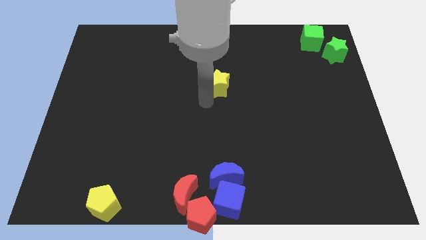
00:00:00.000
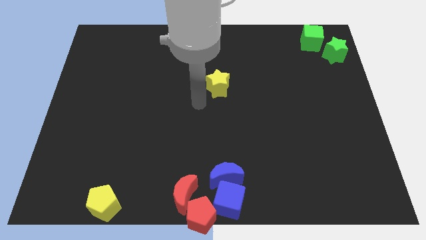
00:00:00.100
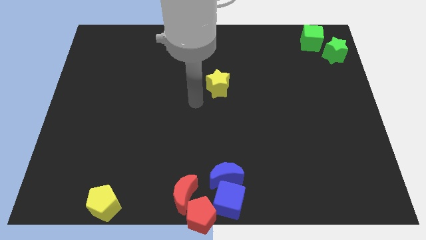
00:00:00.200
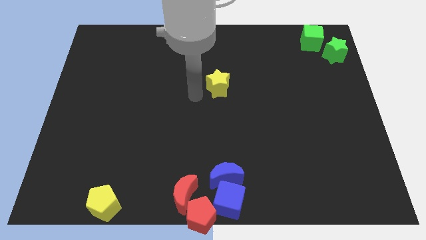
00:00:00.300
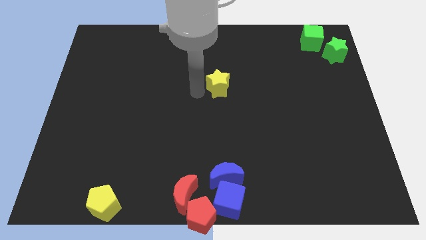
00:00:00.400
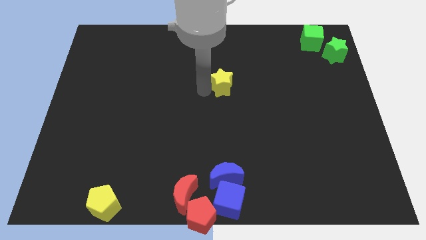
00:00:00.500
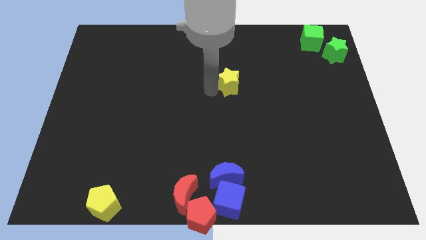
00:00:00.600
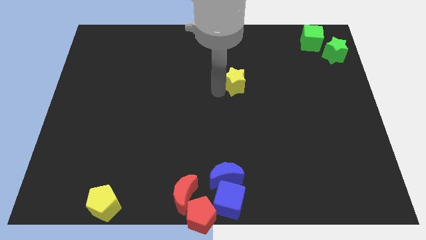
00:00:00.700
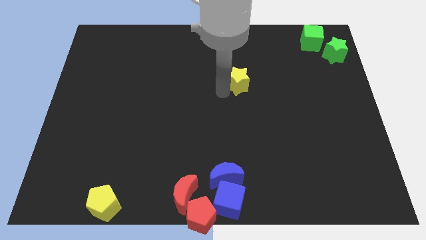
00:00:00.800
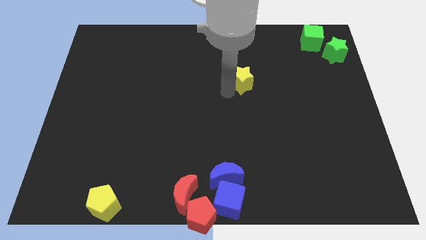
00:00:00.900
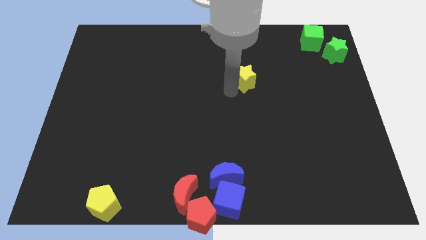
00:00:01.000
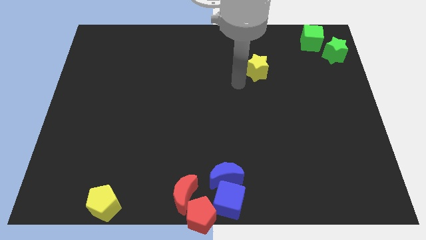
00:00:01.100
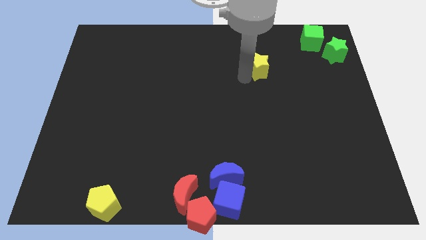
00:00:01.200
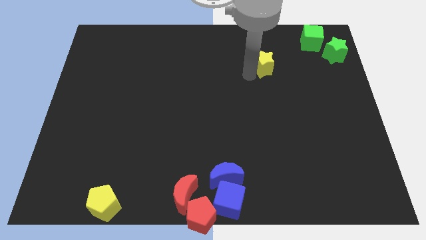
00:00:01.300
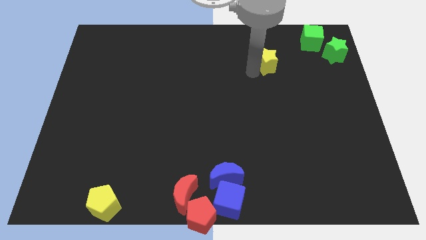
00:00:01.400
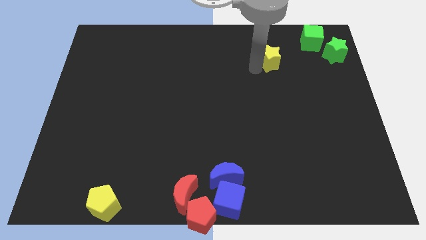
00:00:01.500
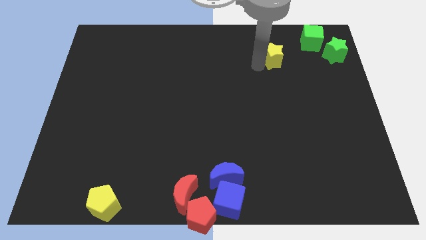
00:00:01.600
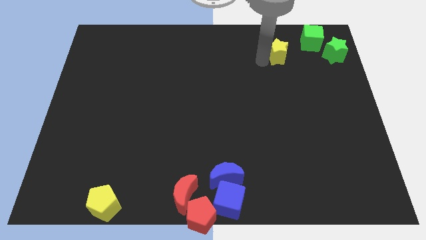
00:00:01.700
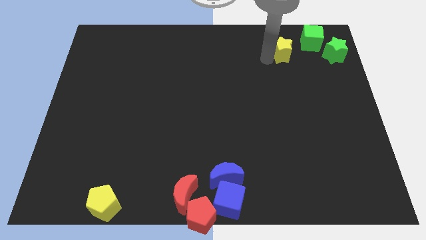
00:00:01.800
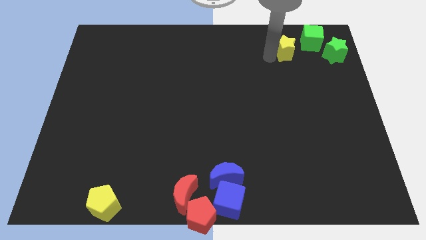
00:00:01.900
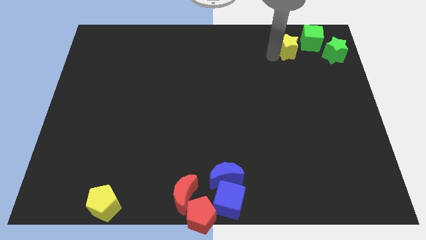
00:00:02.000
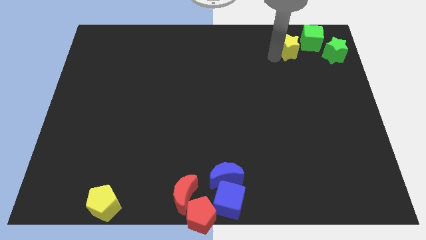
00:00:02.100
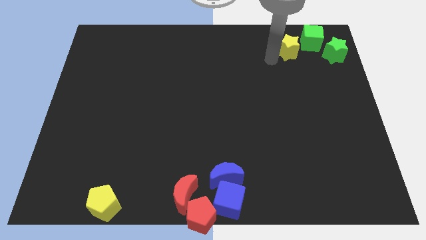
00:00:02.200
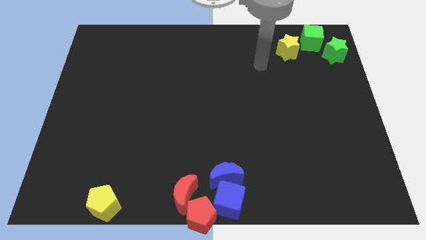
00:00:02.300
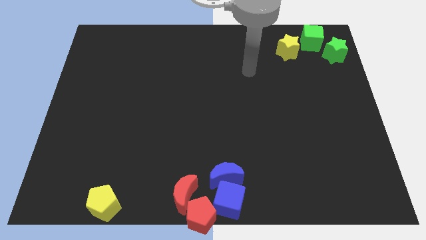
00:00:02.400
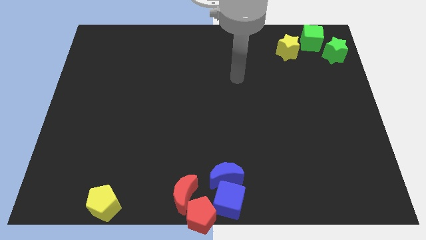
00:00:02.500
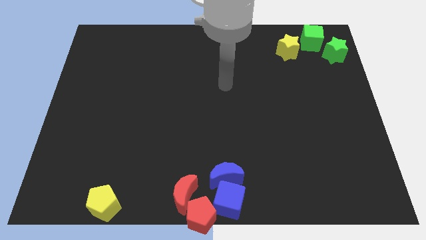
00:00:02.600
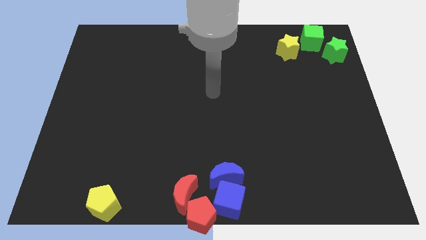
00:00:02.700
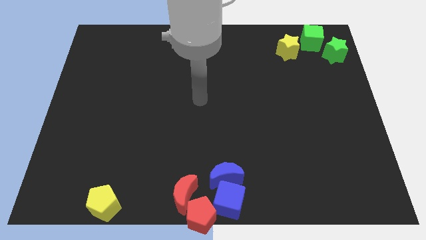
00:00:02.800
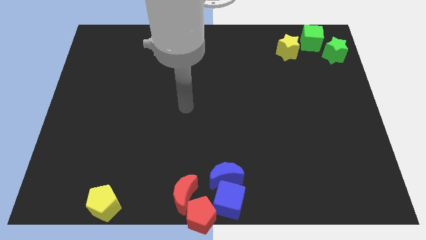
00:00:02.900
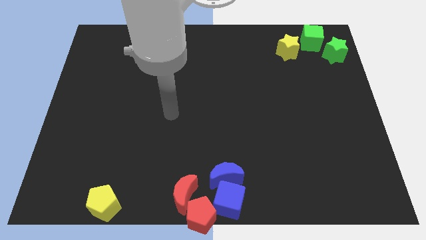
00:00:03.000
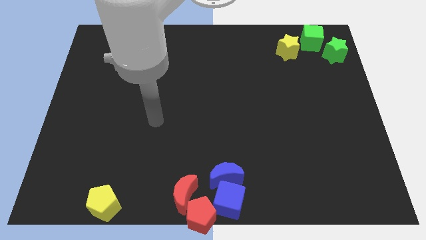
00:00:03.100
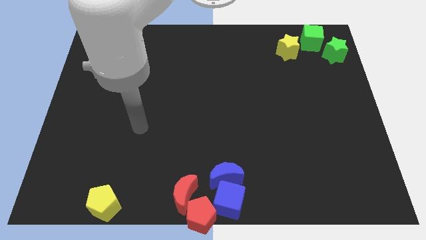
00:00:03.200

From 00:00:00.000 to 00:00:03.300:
push the yellow star at the down left side of the green square

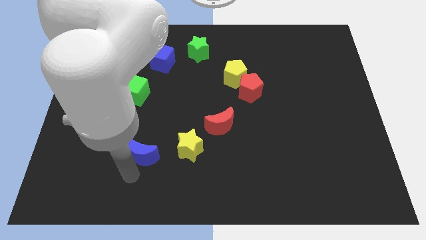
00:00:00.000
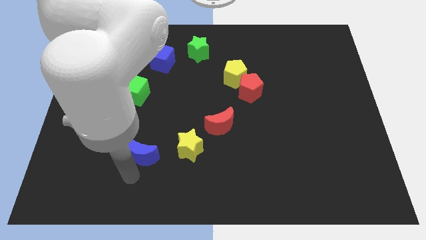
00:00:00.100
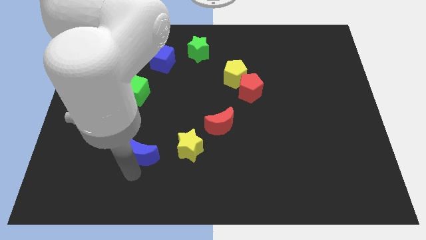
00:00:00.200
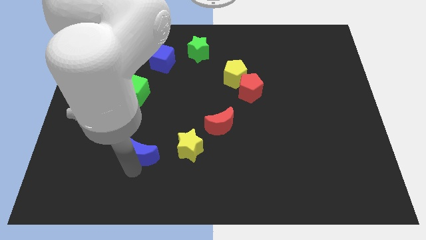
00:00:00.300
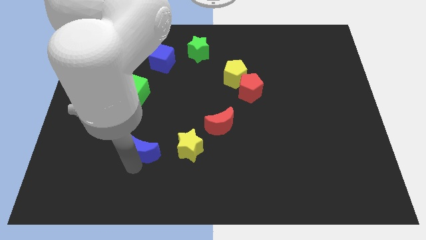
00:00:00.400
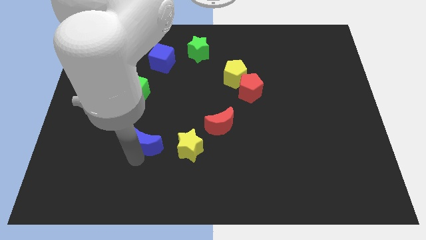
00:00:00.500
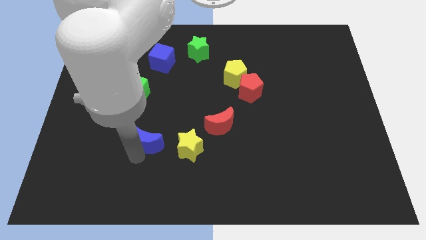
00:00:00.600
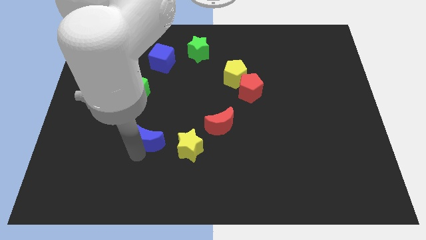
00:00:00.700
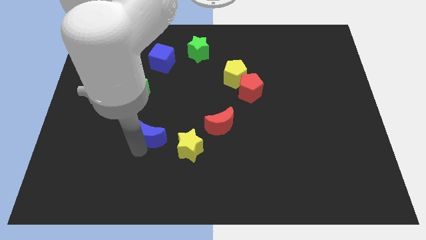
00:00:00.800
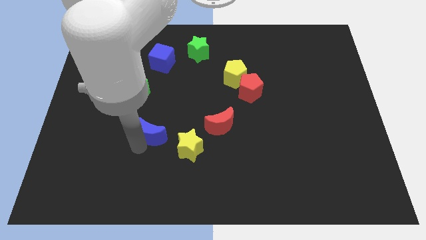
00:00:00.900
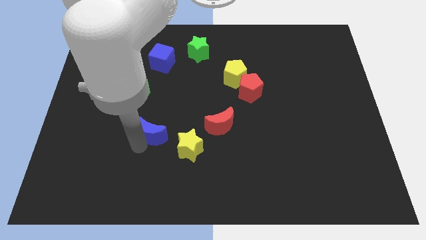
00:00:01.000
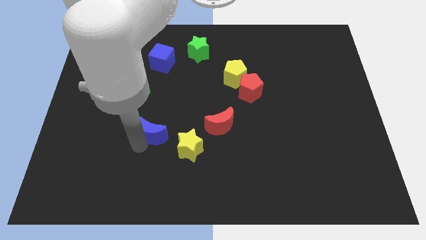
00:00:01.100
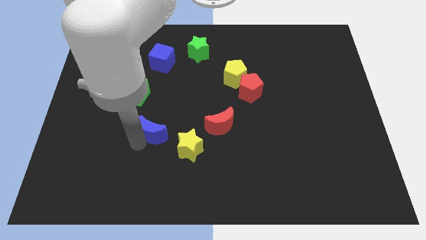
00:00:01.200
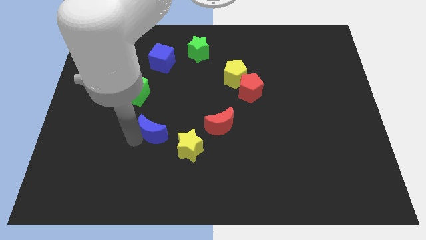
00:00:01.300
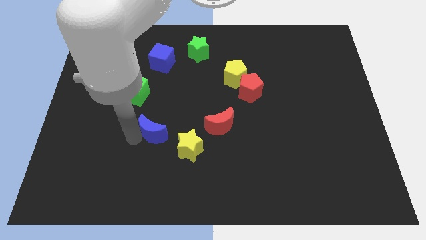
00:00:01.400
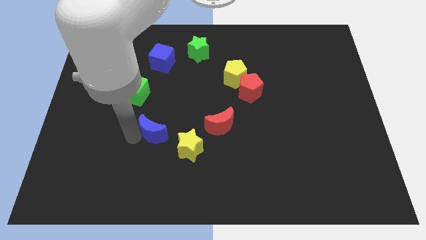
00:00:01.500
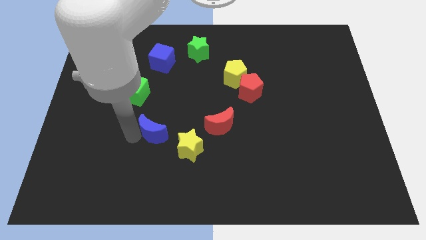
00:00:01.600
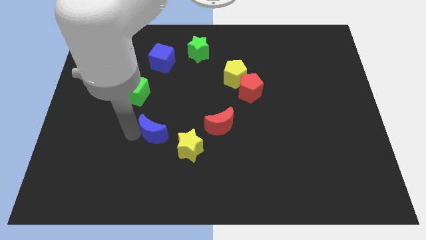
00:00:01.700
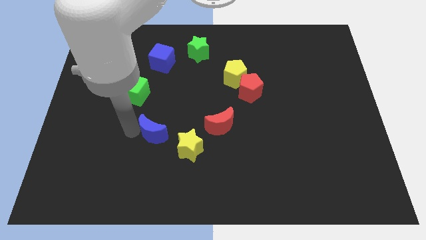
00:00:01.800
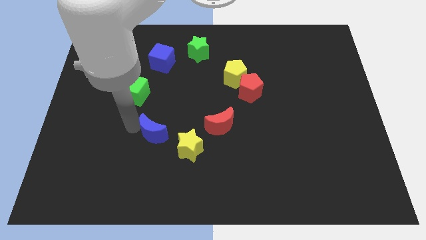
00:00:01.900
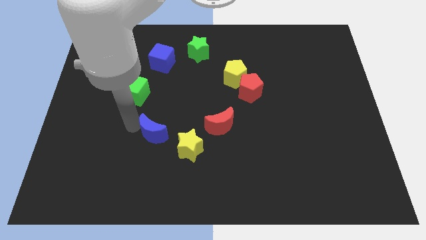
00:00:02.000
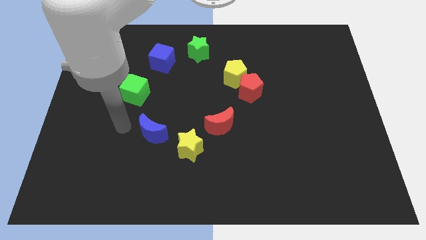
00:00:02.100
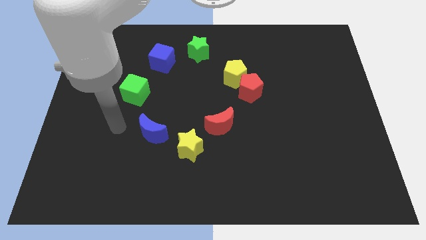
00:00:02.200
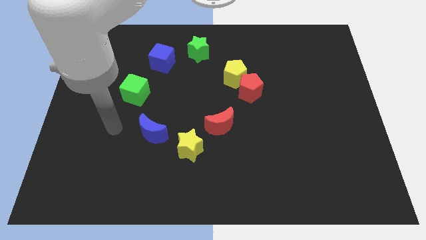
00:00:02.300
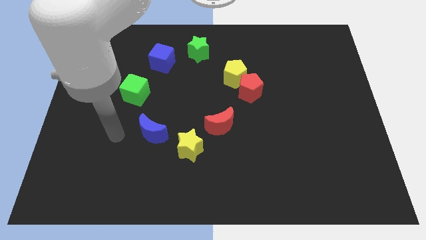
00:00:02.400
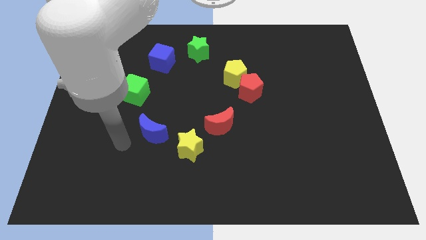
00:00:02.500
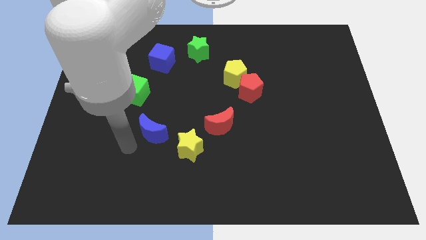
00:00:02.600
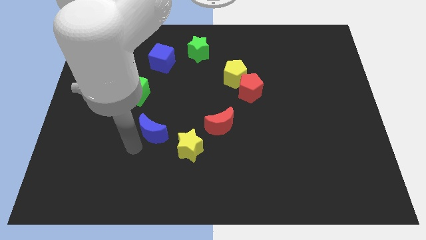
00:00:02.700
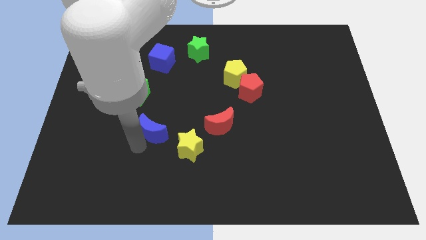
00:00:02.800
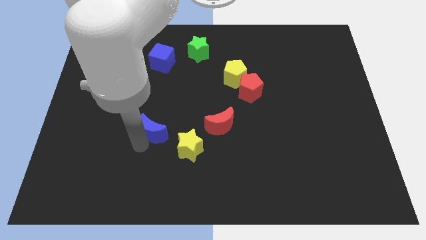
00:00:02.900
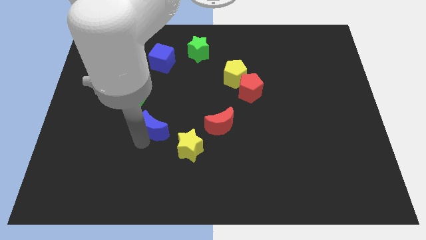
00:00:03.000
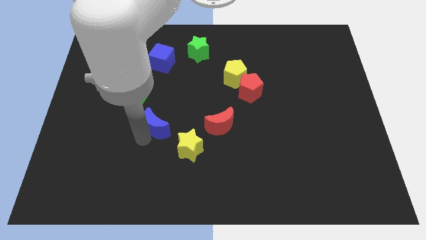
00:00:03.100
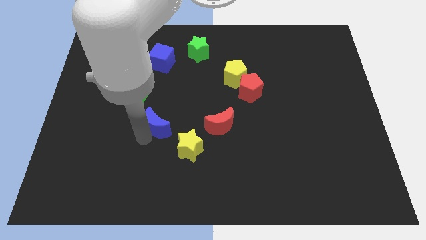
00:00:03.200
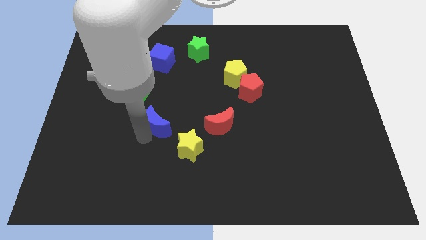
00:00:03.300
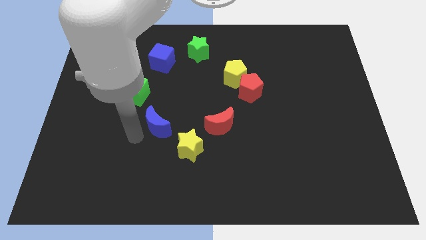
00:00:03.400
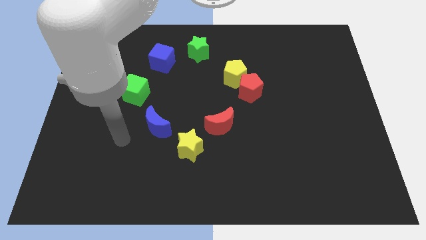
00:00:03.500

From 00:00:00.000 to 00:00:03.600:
place the blue moon diagonal to the green cube

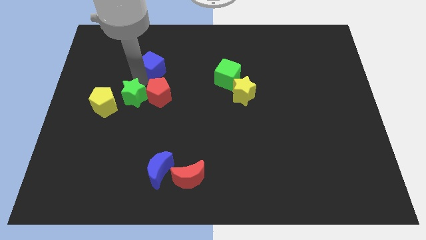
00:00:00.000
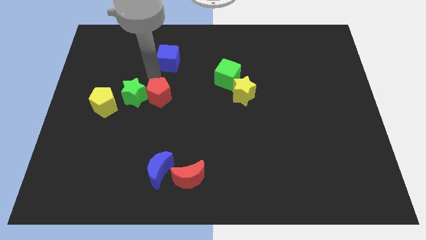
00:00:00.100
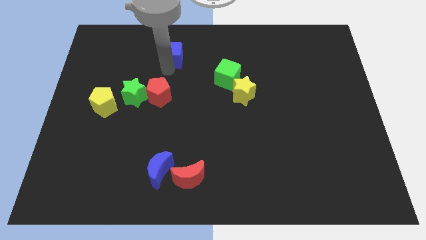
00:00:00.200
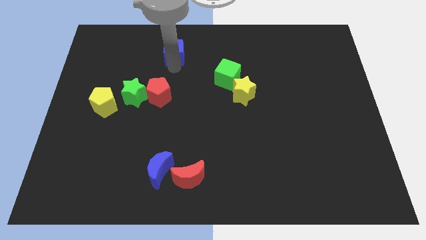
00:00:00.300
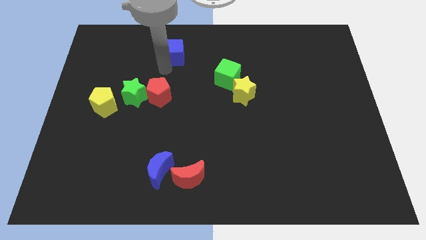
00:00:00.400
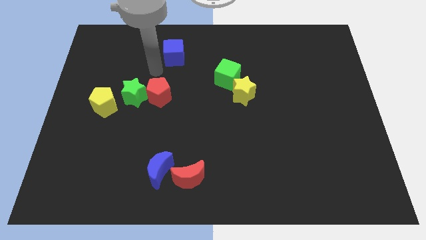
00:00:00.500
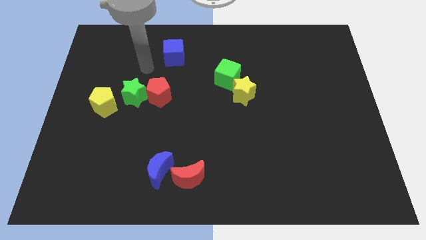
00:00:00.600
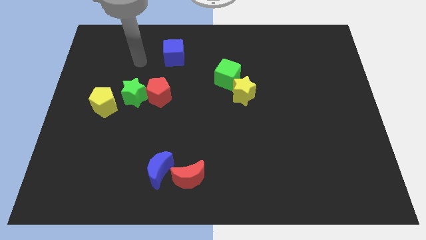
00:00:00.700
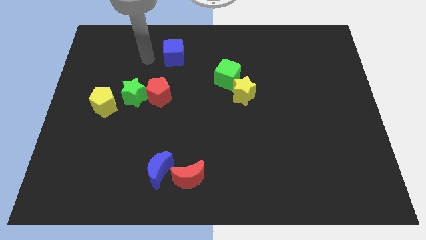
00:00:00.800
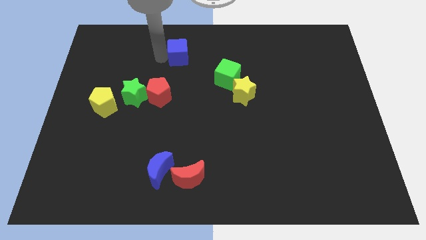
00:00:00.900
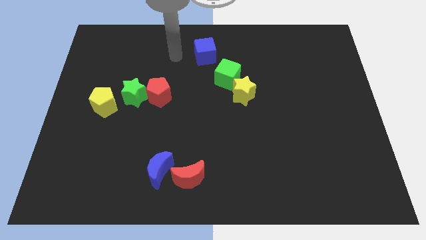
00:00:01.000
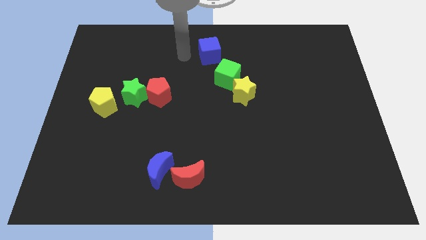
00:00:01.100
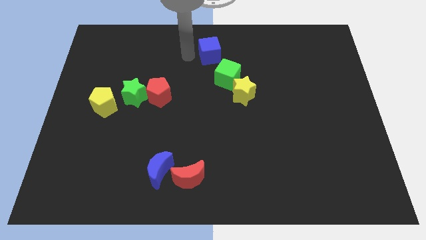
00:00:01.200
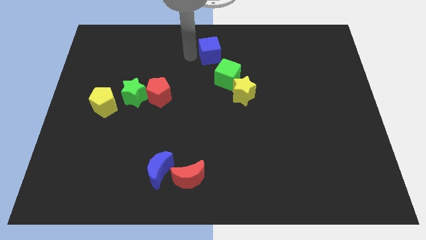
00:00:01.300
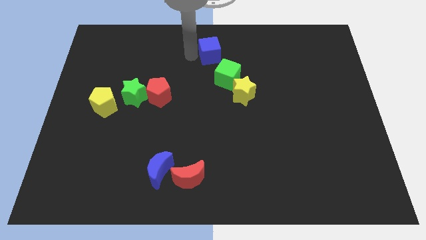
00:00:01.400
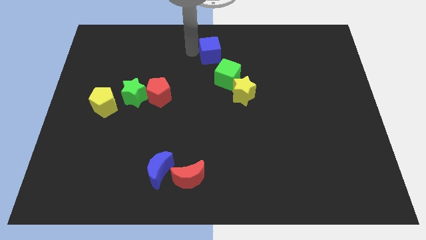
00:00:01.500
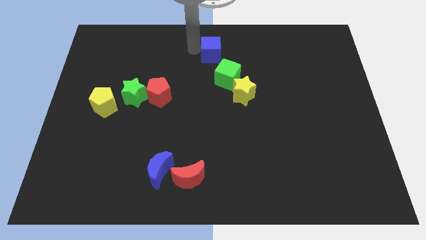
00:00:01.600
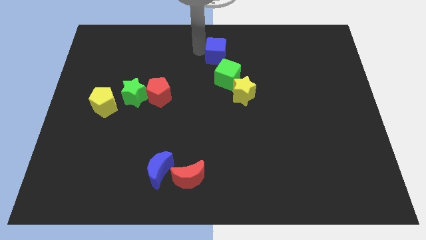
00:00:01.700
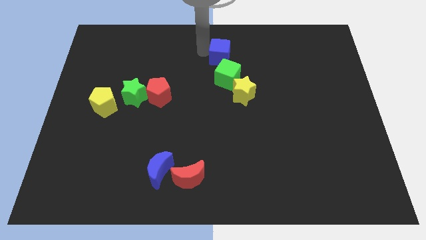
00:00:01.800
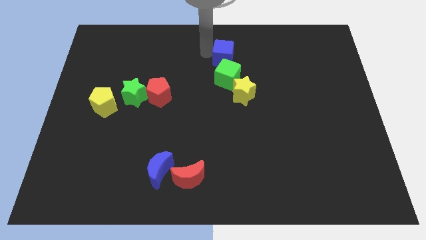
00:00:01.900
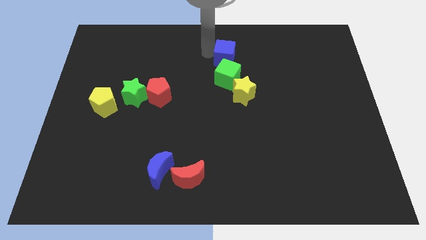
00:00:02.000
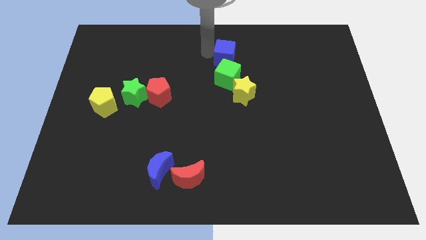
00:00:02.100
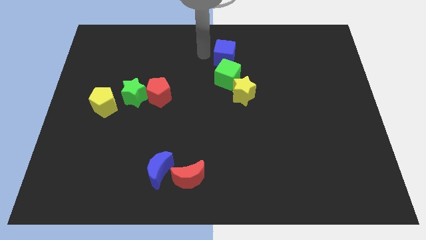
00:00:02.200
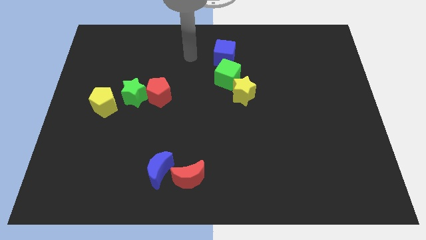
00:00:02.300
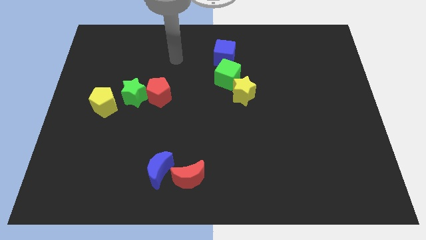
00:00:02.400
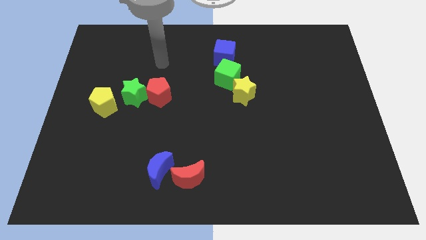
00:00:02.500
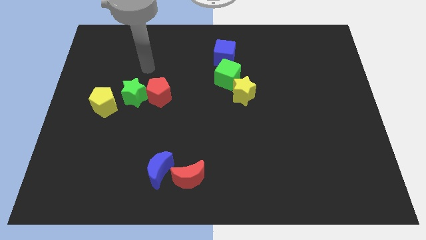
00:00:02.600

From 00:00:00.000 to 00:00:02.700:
place the blue cube above the green cube
